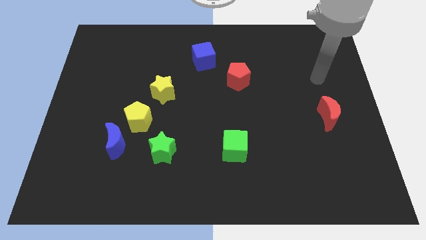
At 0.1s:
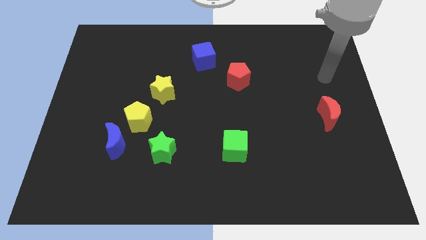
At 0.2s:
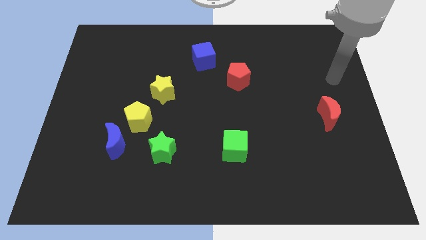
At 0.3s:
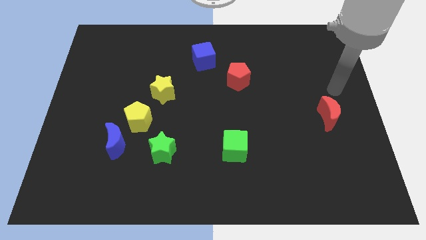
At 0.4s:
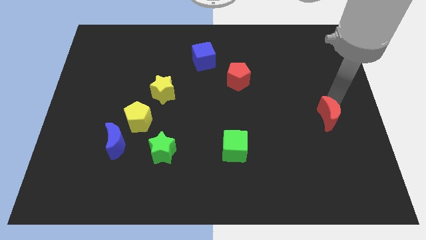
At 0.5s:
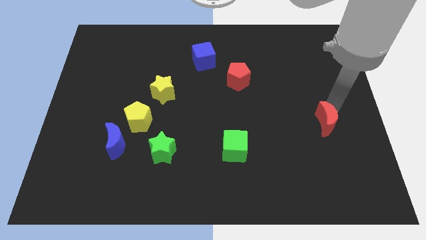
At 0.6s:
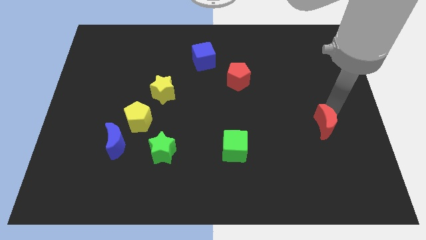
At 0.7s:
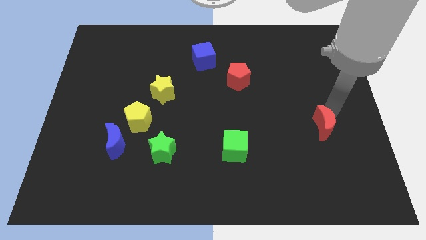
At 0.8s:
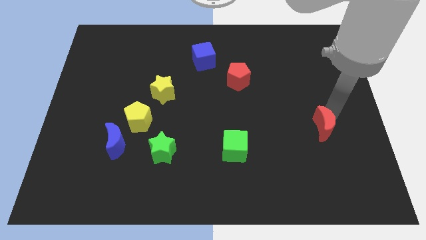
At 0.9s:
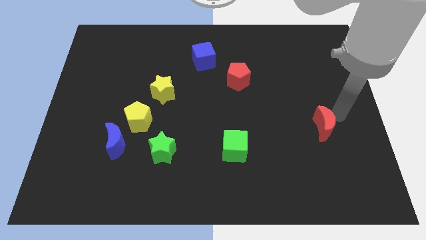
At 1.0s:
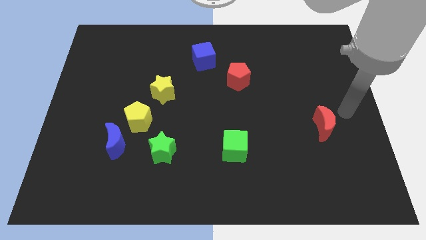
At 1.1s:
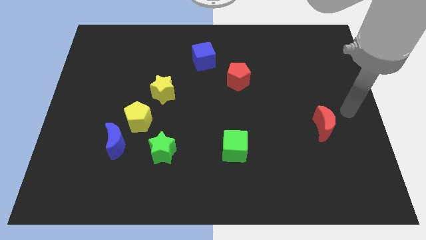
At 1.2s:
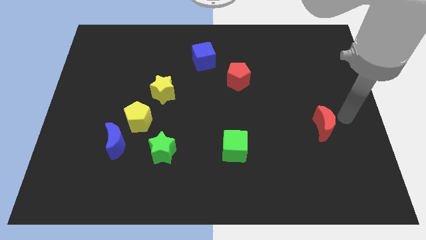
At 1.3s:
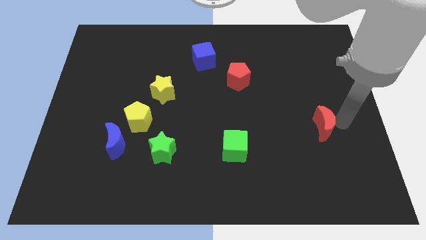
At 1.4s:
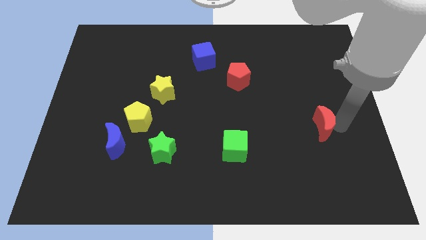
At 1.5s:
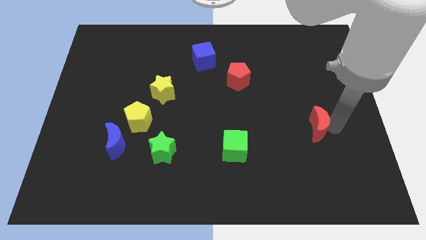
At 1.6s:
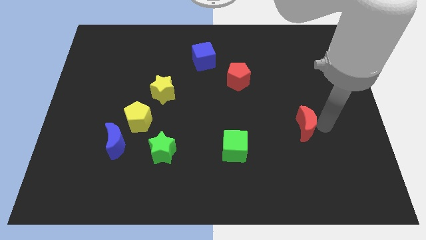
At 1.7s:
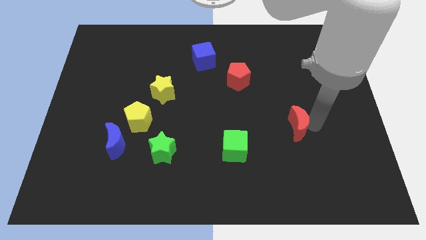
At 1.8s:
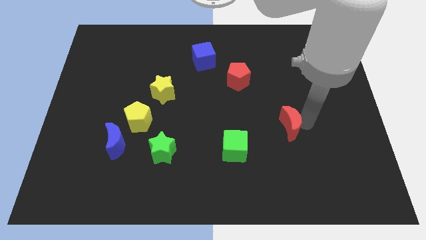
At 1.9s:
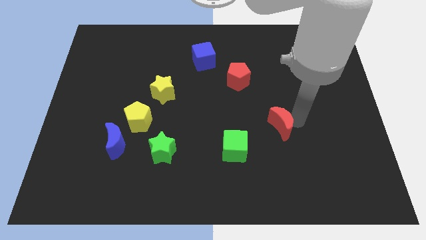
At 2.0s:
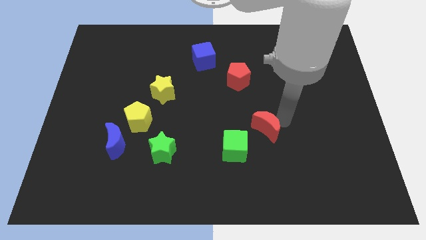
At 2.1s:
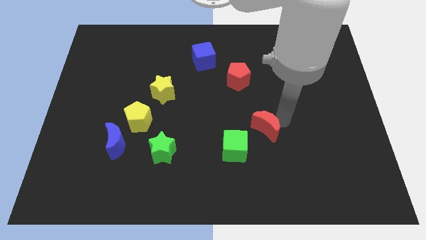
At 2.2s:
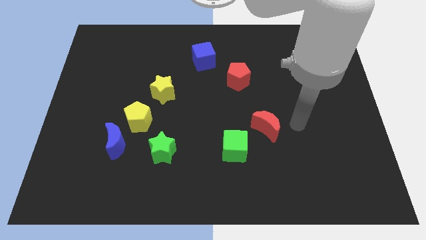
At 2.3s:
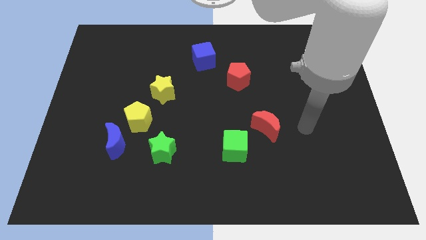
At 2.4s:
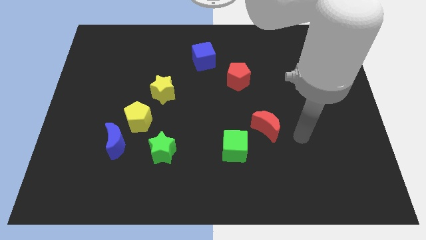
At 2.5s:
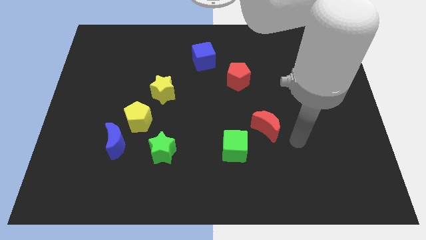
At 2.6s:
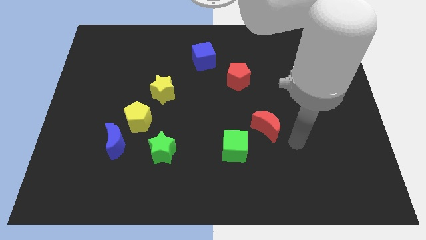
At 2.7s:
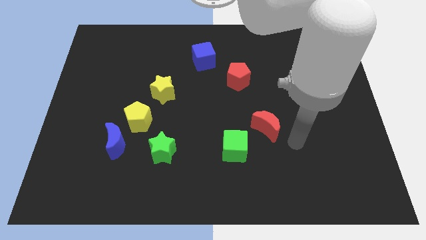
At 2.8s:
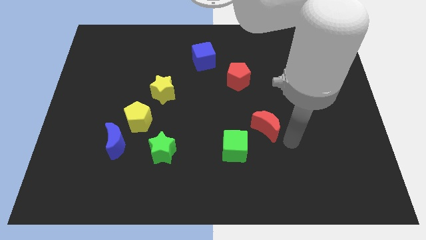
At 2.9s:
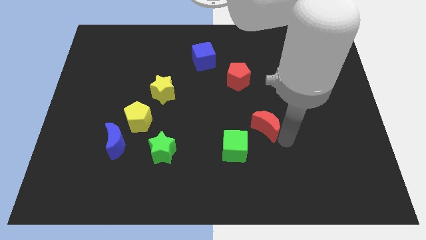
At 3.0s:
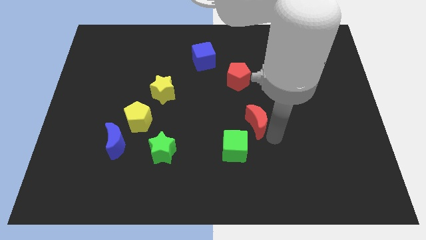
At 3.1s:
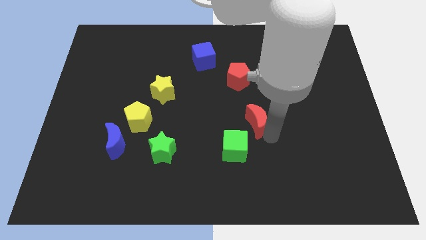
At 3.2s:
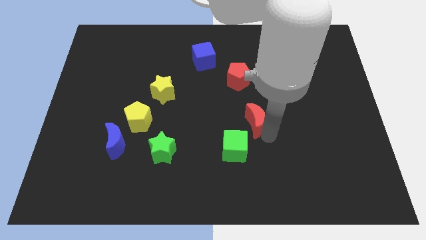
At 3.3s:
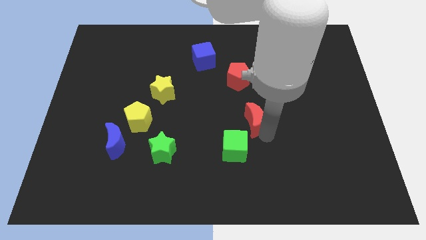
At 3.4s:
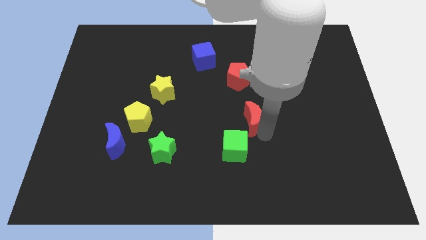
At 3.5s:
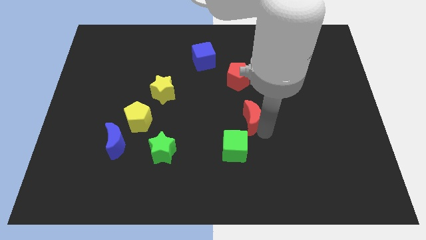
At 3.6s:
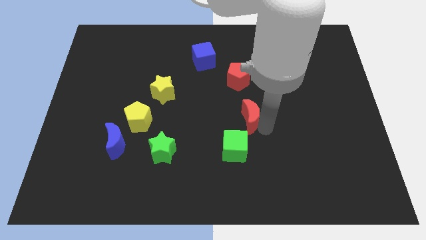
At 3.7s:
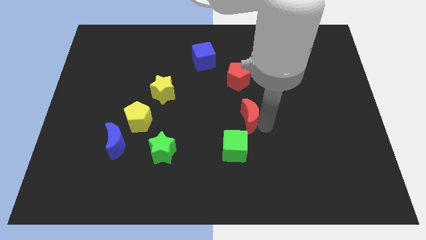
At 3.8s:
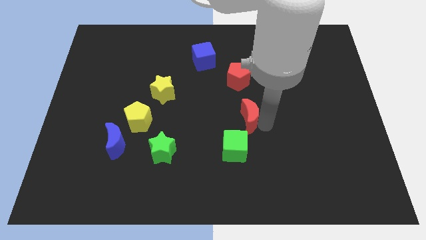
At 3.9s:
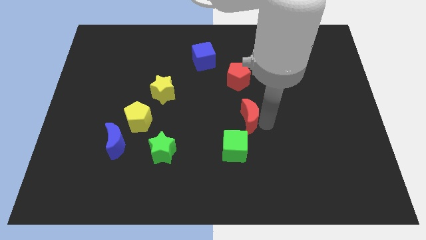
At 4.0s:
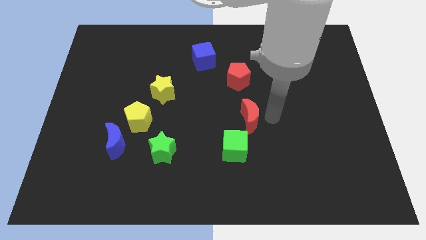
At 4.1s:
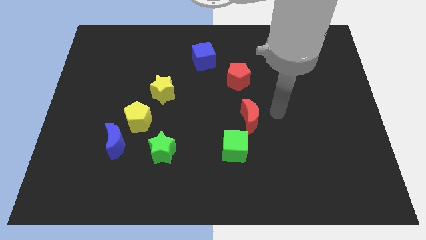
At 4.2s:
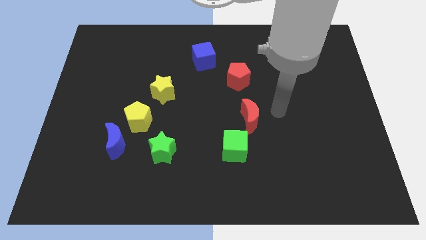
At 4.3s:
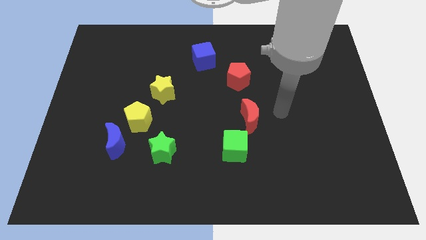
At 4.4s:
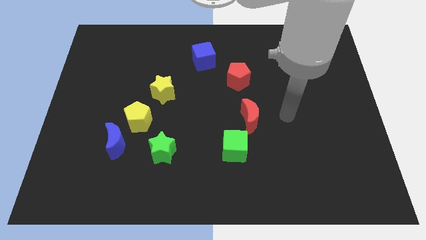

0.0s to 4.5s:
push the red crescent close to the green cube

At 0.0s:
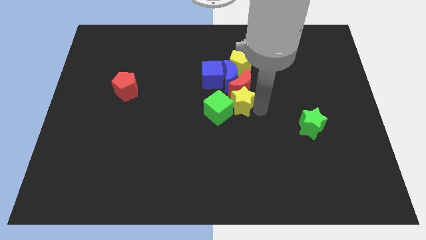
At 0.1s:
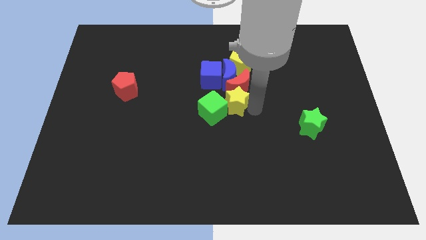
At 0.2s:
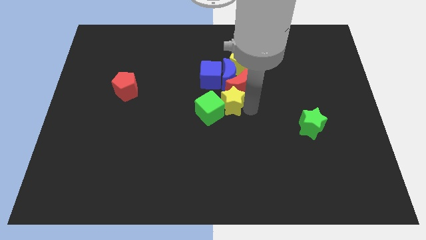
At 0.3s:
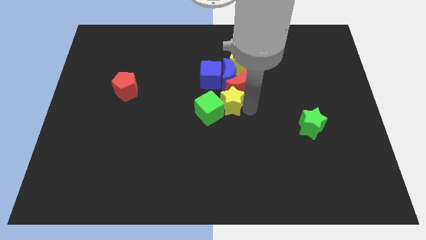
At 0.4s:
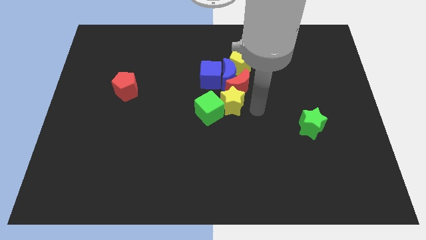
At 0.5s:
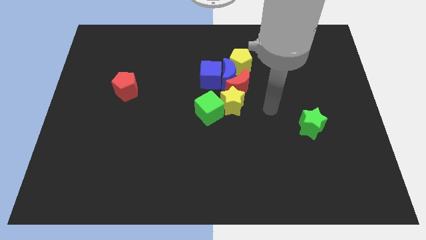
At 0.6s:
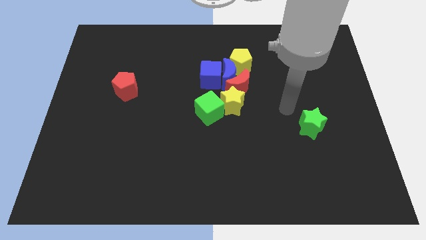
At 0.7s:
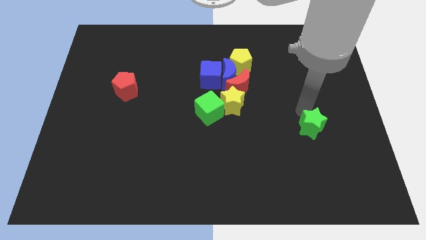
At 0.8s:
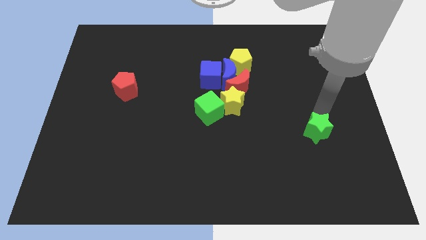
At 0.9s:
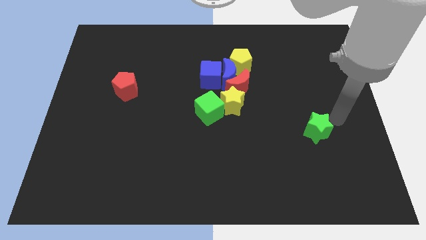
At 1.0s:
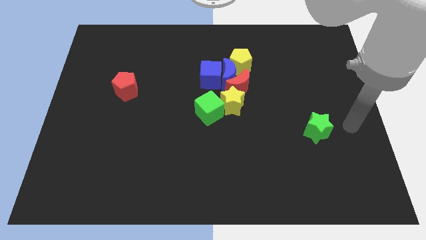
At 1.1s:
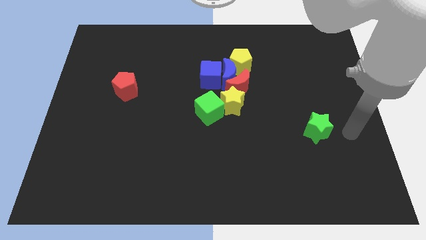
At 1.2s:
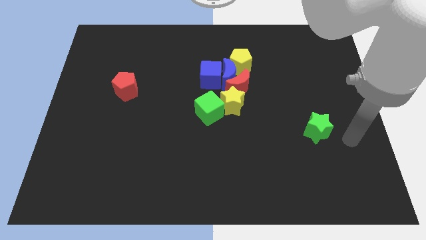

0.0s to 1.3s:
move your arm away from yellow star

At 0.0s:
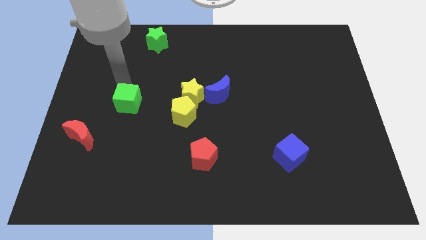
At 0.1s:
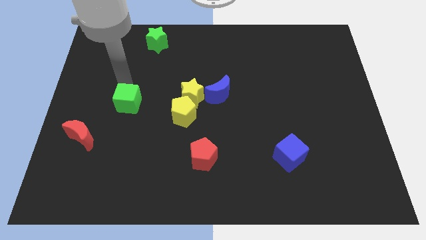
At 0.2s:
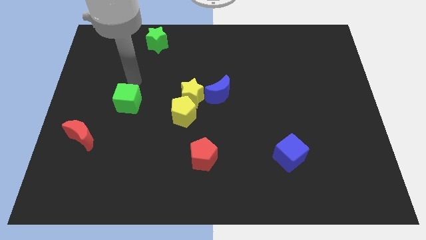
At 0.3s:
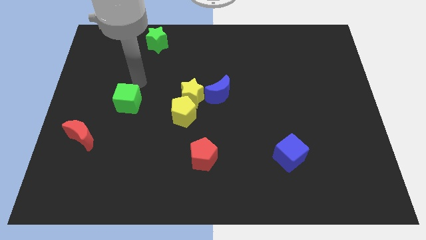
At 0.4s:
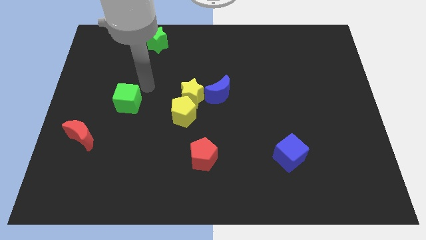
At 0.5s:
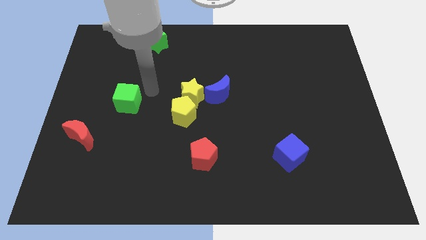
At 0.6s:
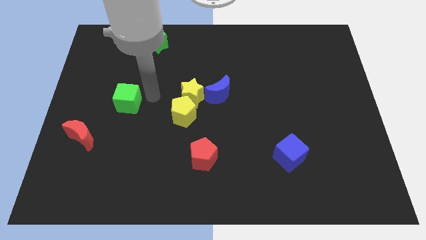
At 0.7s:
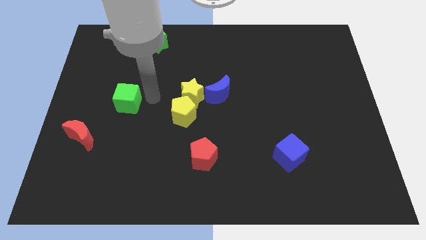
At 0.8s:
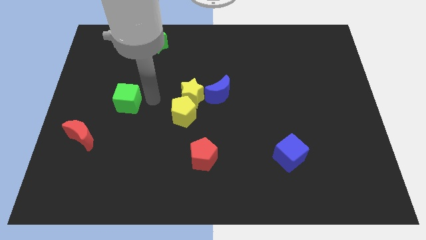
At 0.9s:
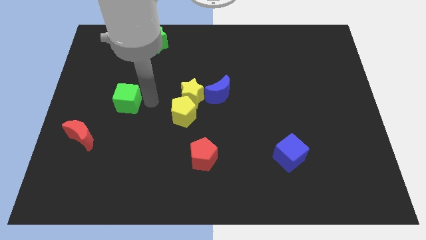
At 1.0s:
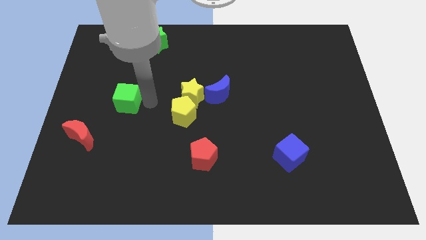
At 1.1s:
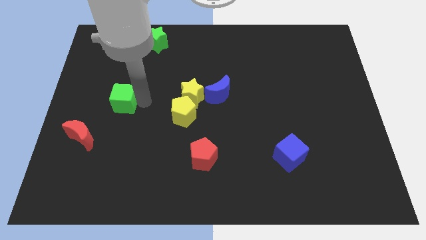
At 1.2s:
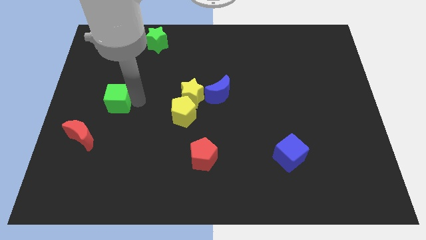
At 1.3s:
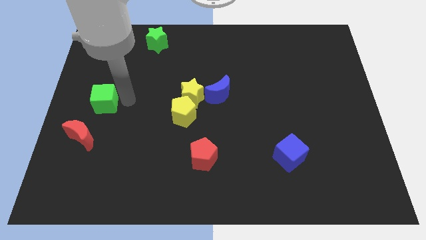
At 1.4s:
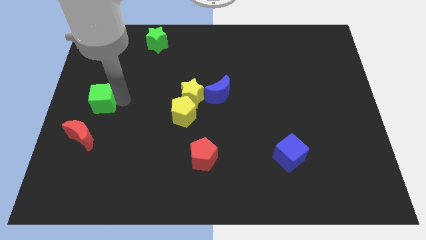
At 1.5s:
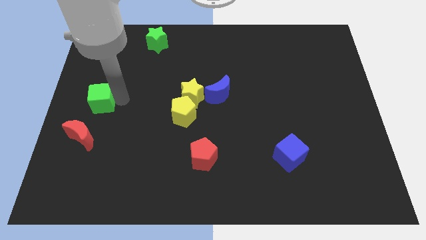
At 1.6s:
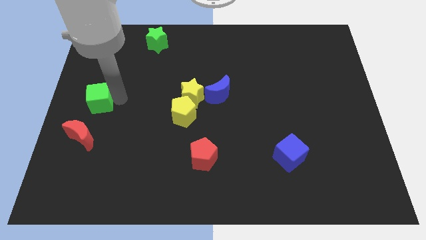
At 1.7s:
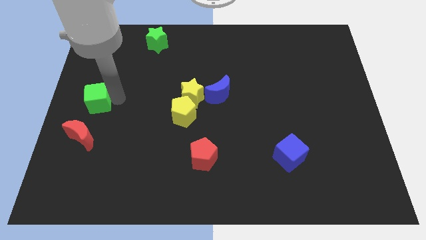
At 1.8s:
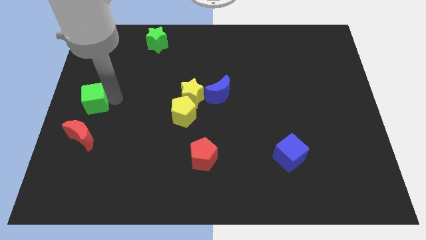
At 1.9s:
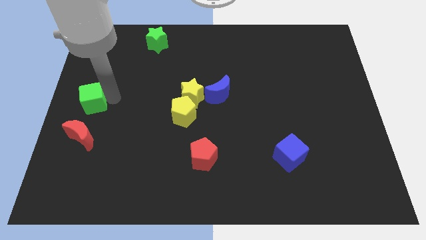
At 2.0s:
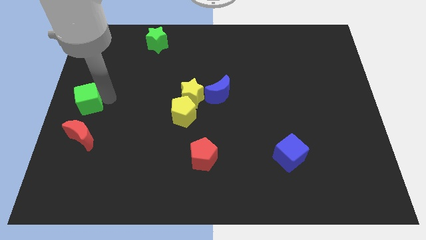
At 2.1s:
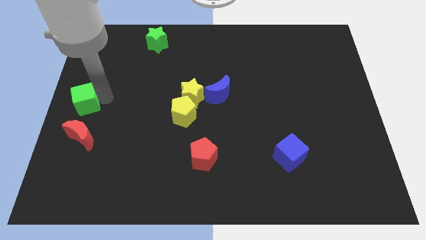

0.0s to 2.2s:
push the green cube to the top of the red crescent

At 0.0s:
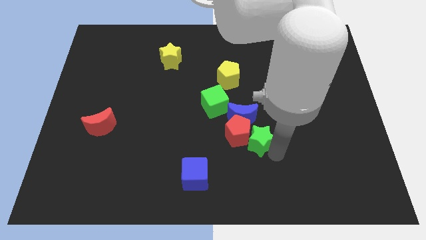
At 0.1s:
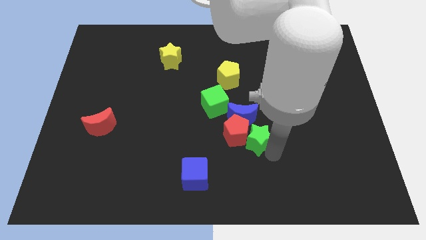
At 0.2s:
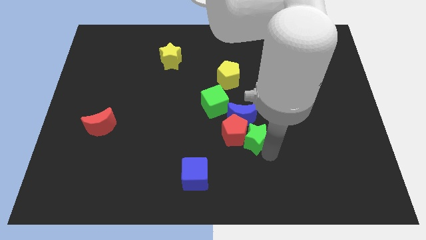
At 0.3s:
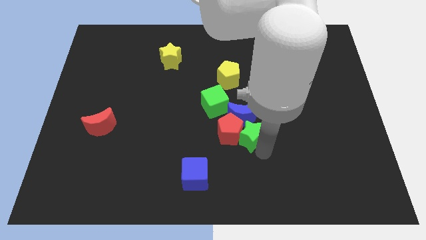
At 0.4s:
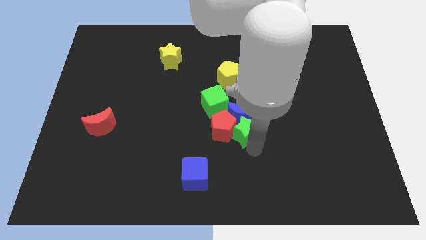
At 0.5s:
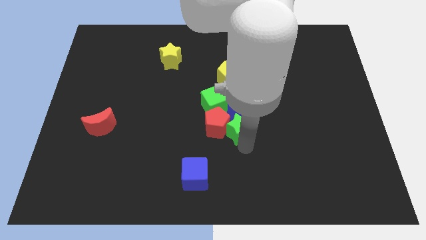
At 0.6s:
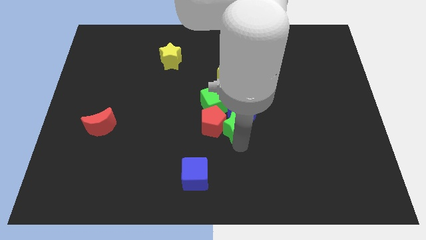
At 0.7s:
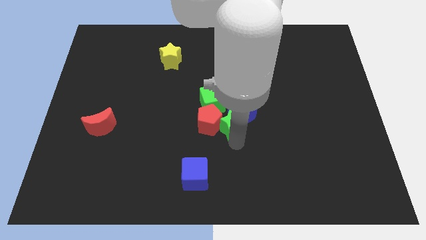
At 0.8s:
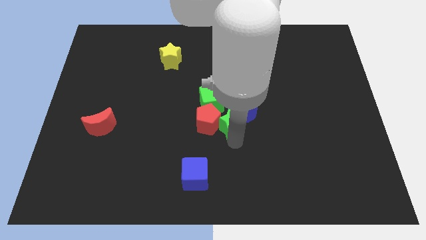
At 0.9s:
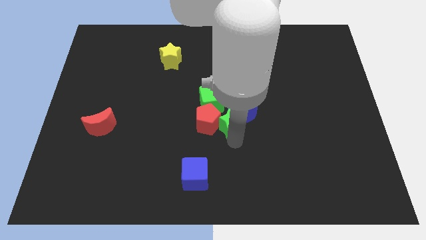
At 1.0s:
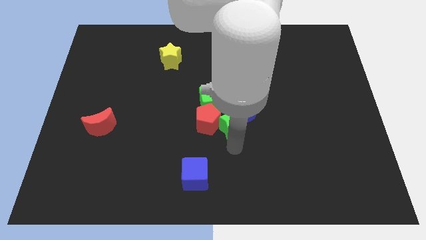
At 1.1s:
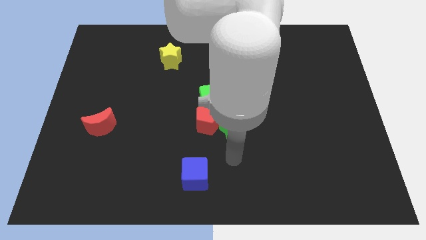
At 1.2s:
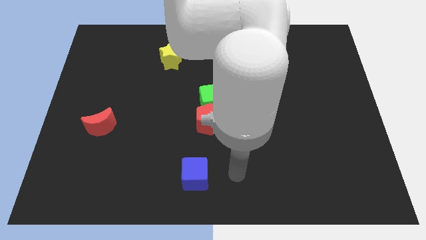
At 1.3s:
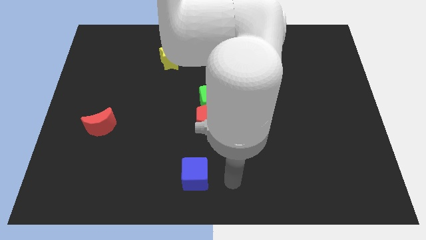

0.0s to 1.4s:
move the green star into the group of blocks
